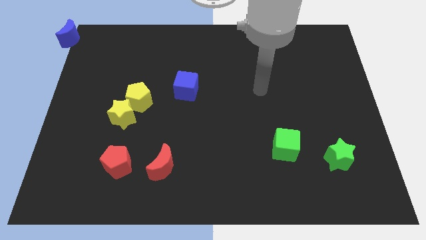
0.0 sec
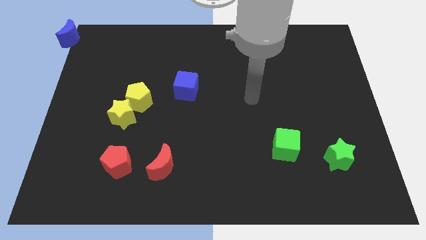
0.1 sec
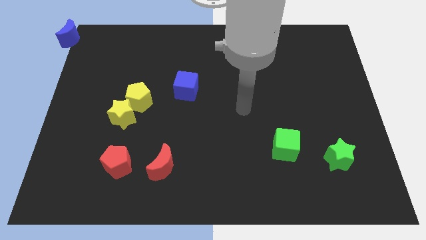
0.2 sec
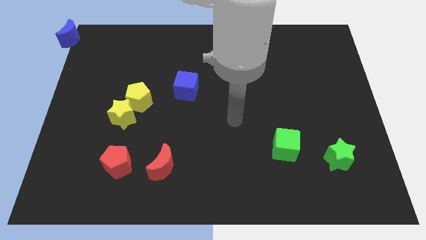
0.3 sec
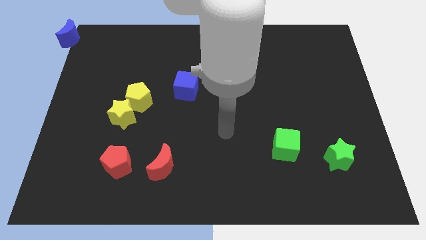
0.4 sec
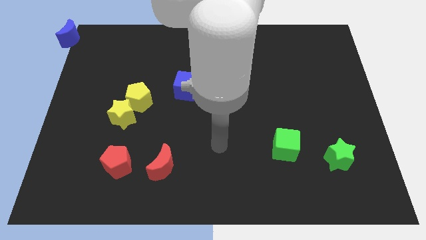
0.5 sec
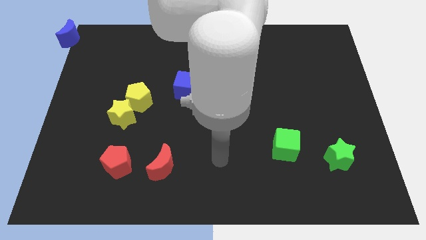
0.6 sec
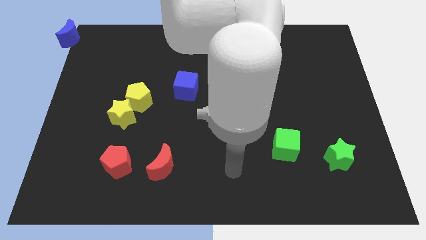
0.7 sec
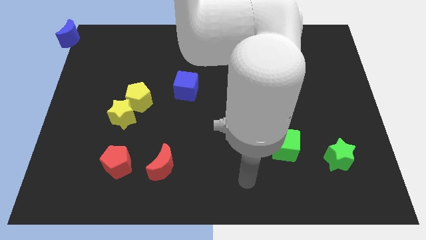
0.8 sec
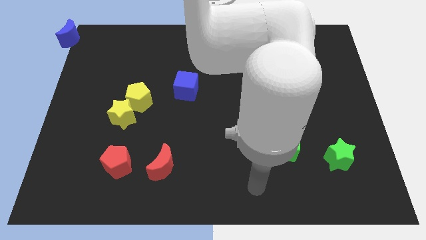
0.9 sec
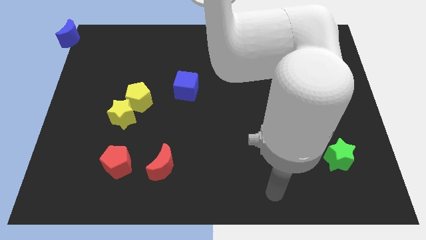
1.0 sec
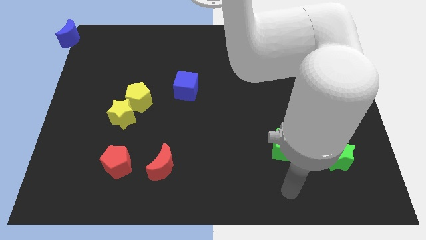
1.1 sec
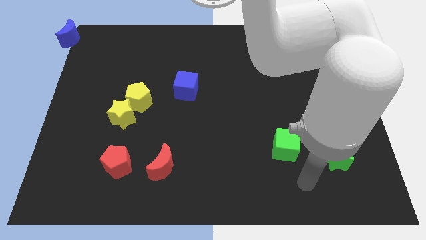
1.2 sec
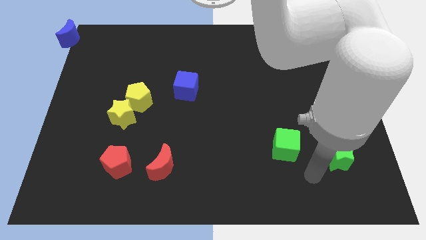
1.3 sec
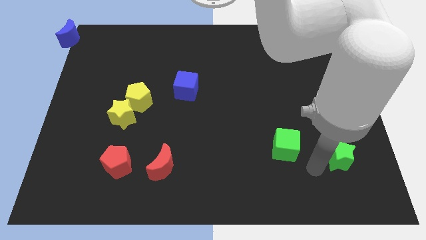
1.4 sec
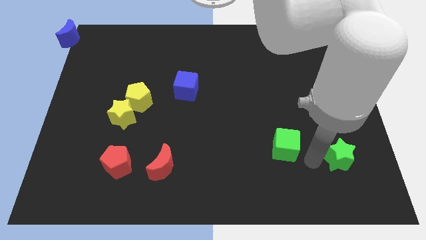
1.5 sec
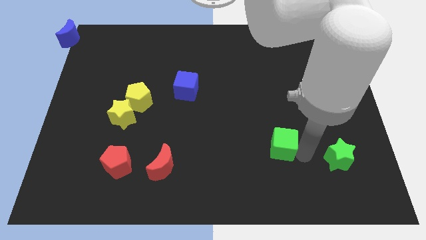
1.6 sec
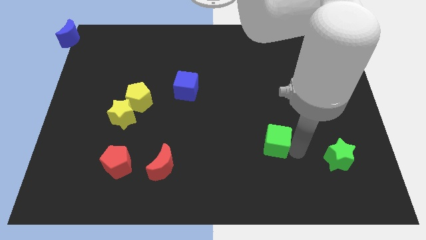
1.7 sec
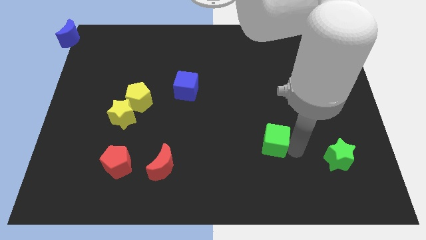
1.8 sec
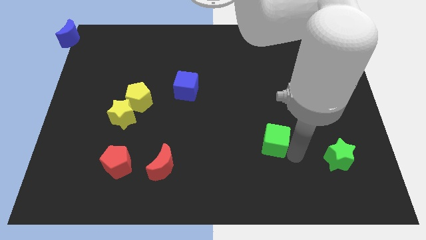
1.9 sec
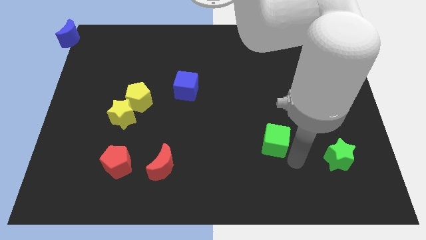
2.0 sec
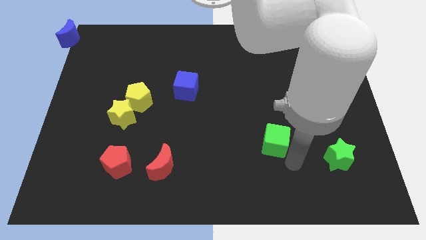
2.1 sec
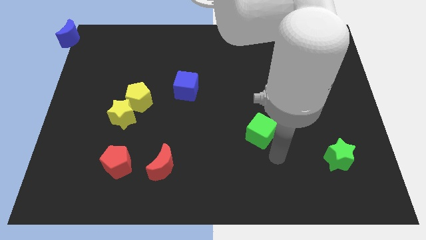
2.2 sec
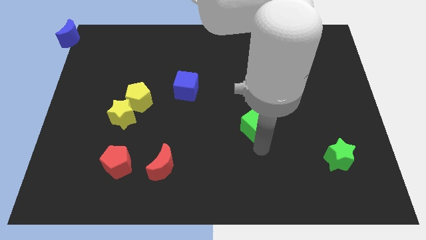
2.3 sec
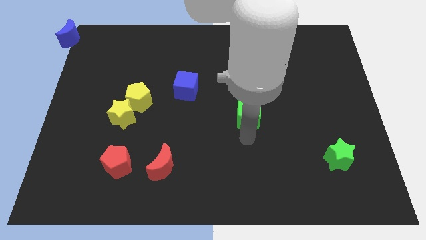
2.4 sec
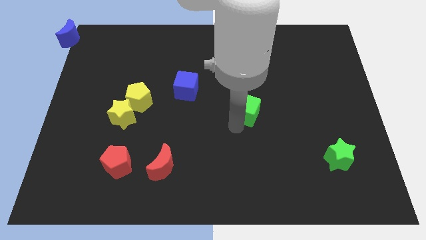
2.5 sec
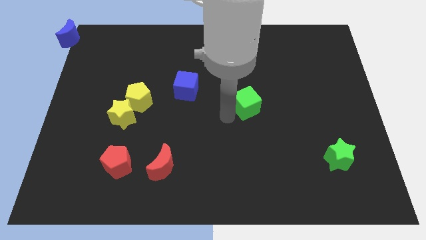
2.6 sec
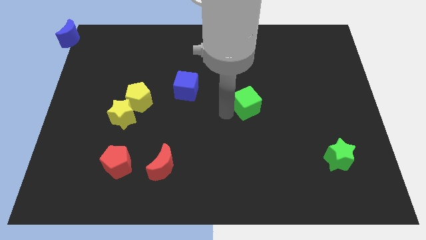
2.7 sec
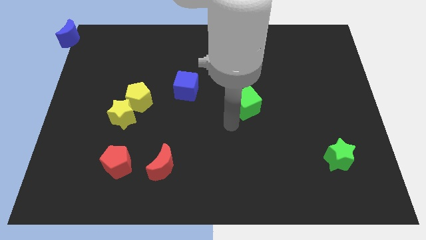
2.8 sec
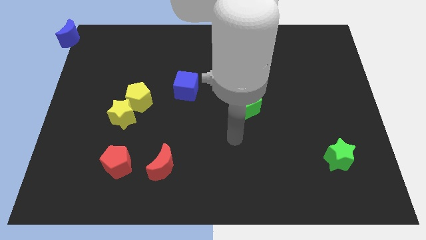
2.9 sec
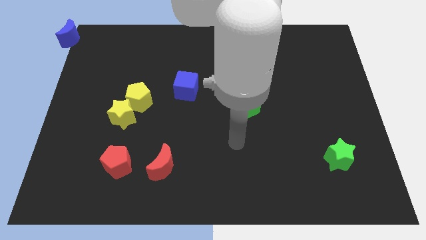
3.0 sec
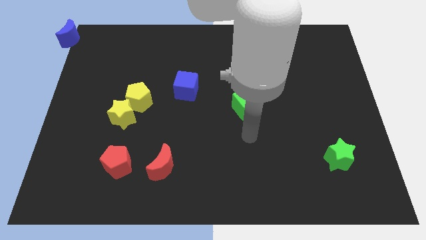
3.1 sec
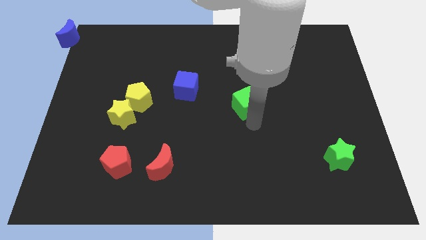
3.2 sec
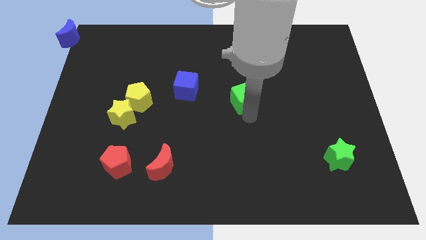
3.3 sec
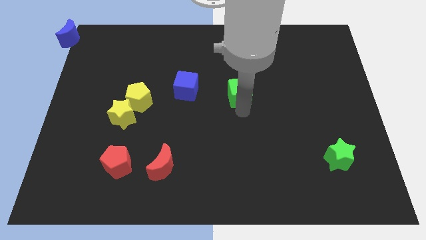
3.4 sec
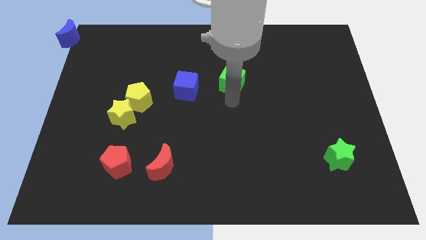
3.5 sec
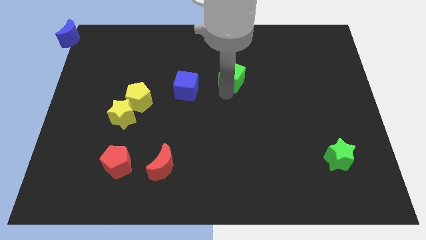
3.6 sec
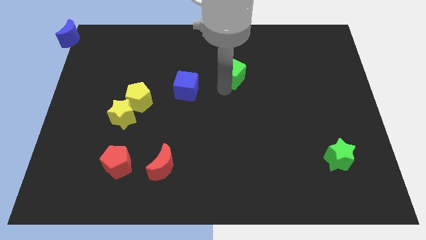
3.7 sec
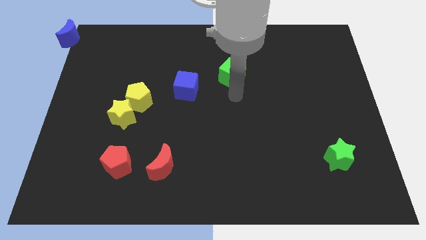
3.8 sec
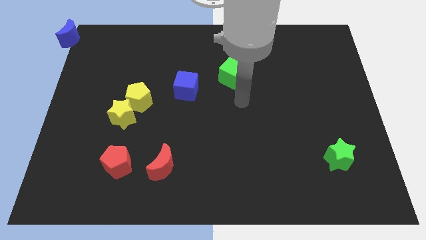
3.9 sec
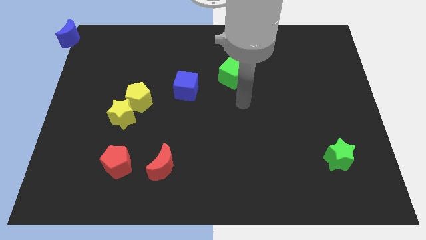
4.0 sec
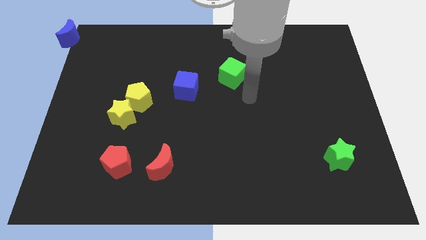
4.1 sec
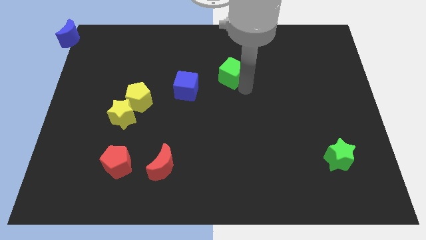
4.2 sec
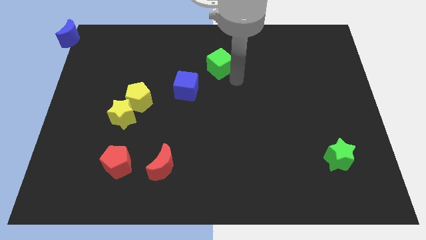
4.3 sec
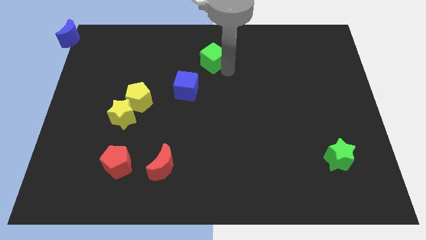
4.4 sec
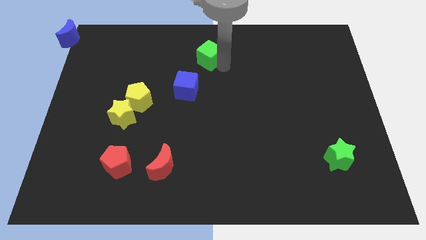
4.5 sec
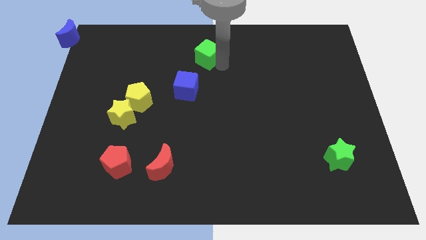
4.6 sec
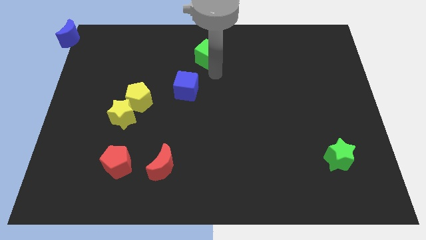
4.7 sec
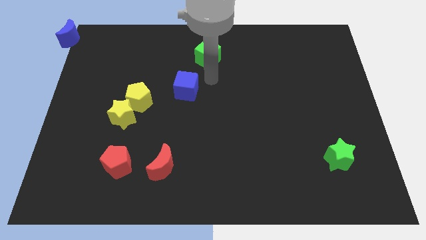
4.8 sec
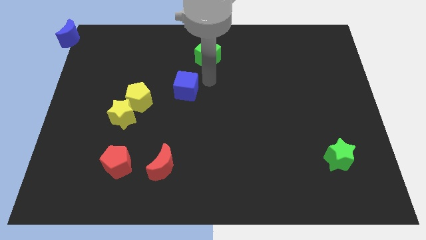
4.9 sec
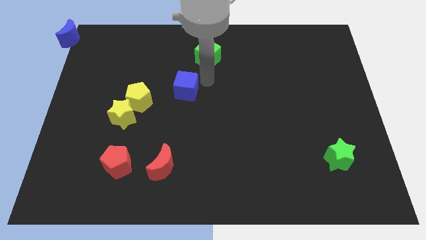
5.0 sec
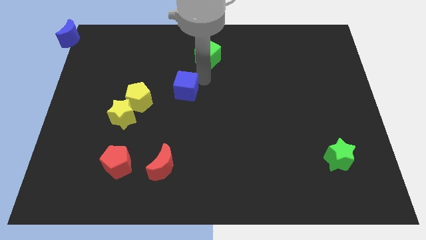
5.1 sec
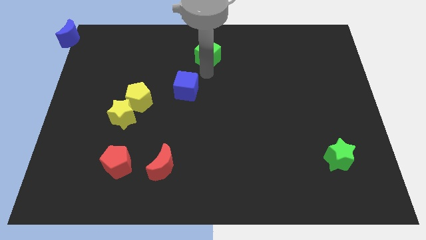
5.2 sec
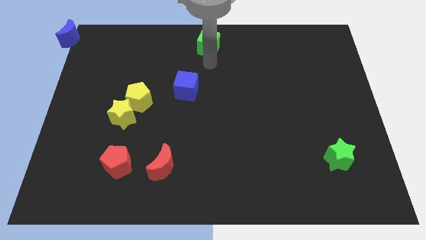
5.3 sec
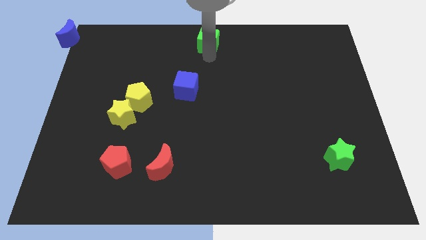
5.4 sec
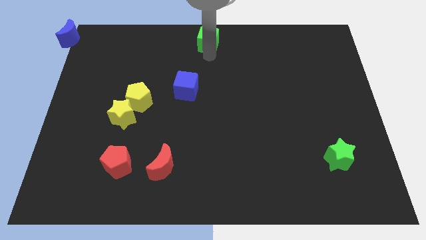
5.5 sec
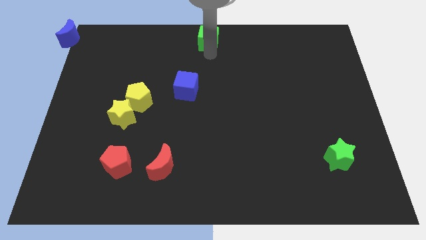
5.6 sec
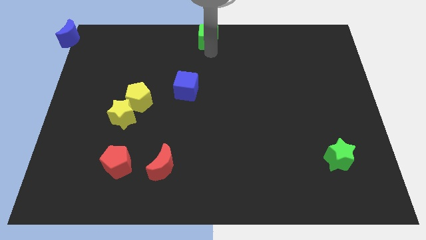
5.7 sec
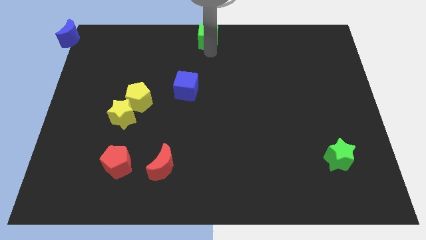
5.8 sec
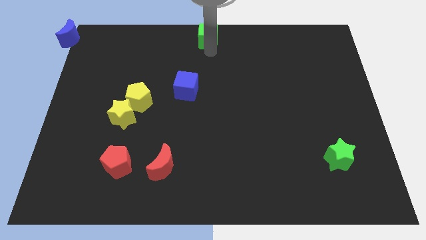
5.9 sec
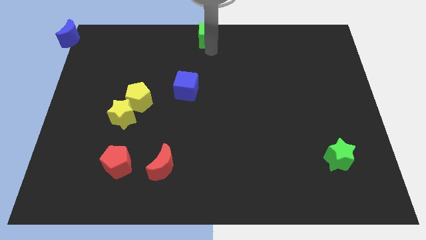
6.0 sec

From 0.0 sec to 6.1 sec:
push green cube to the top center of the board

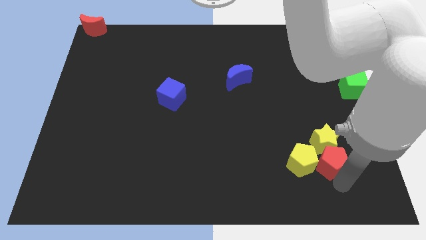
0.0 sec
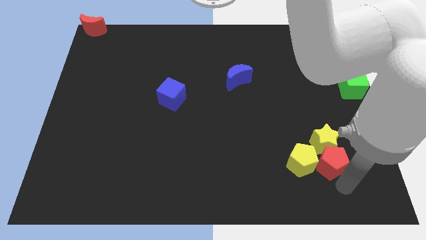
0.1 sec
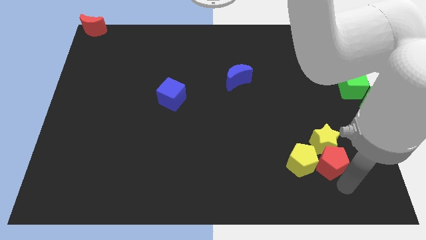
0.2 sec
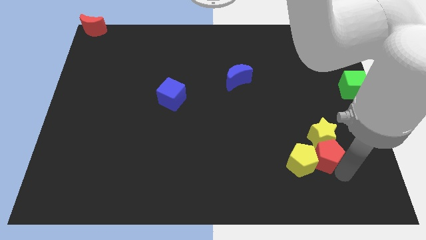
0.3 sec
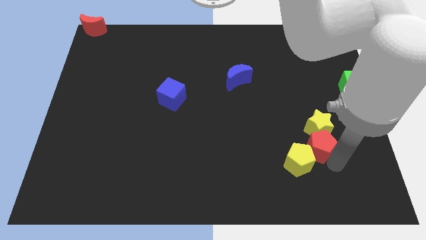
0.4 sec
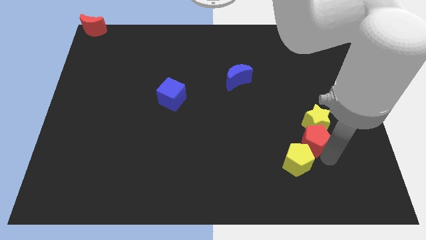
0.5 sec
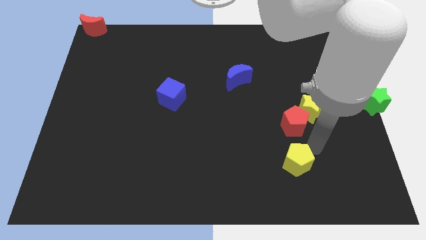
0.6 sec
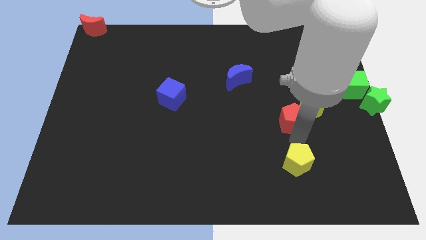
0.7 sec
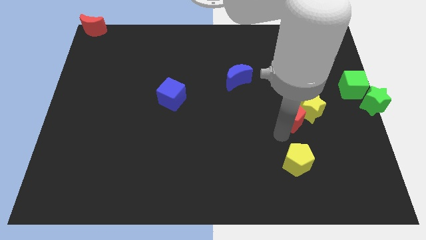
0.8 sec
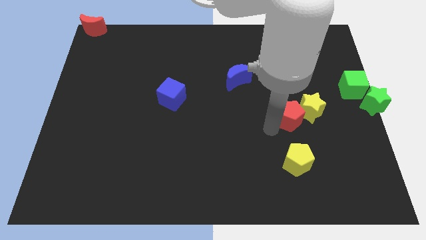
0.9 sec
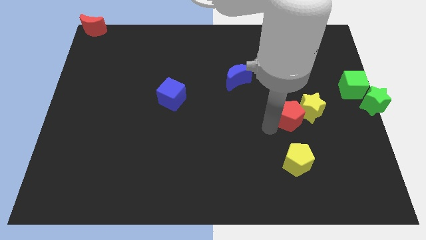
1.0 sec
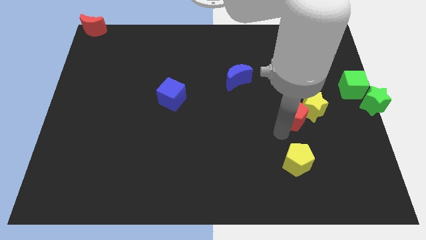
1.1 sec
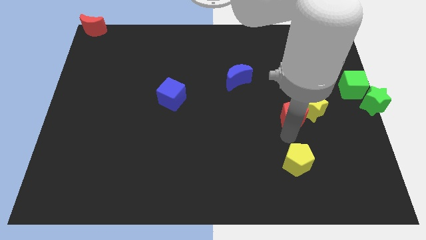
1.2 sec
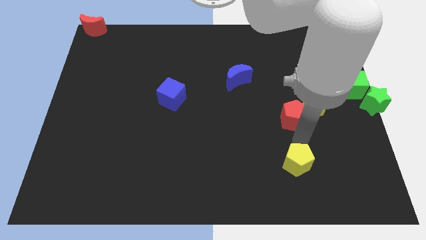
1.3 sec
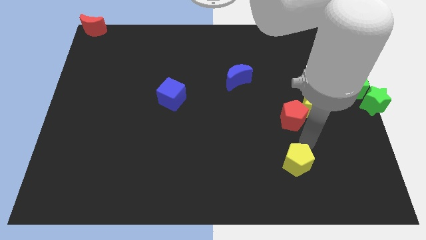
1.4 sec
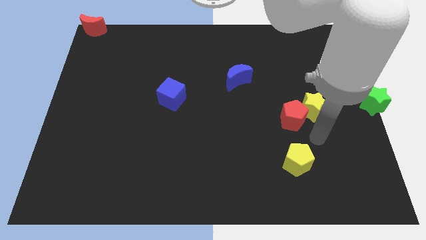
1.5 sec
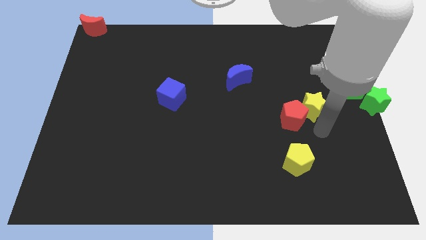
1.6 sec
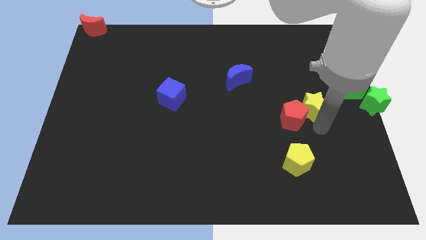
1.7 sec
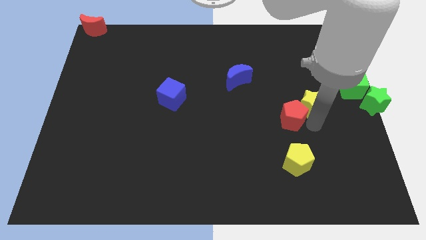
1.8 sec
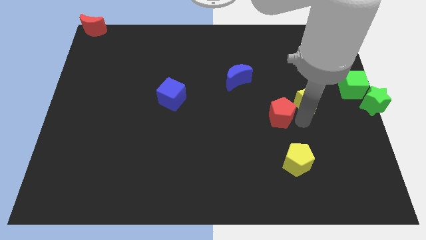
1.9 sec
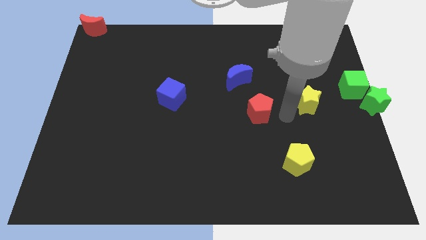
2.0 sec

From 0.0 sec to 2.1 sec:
move the red pentagon into the yellow star

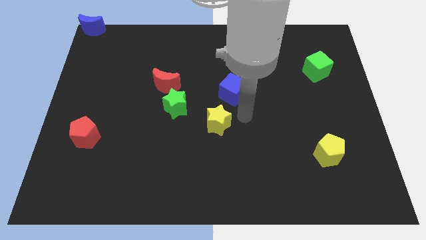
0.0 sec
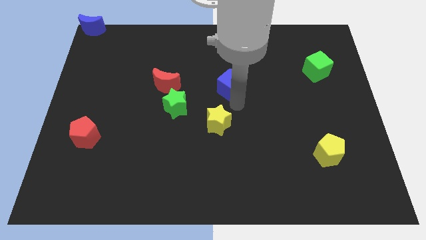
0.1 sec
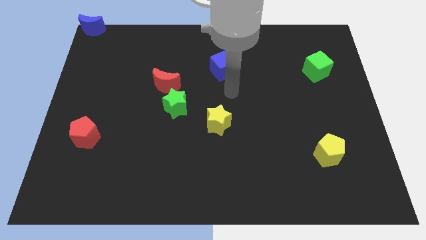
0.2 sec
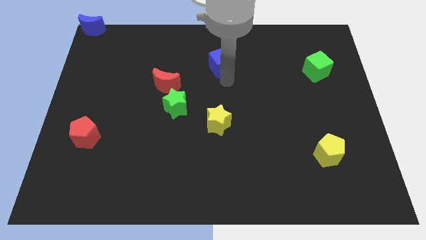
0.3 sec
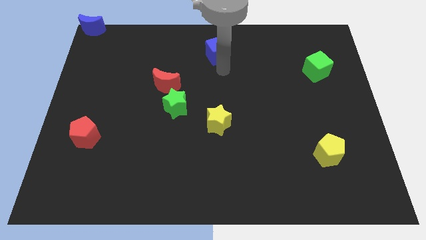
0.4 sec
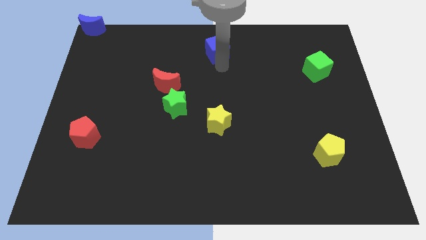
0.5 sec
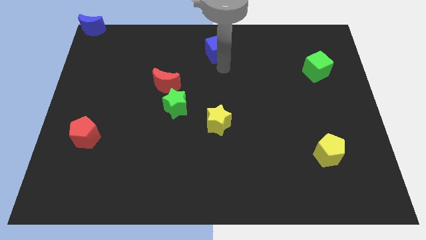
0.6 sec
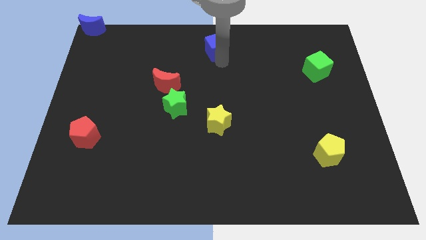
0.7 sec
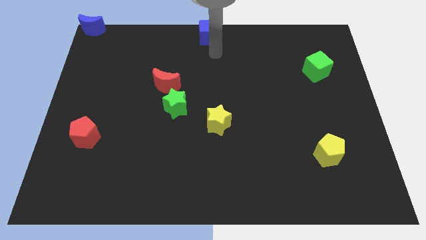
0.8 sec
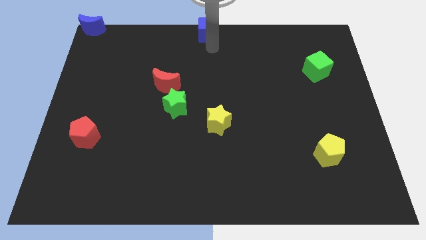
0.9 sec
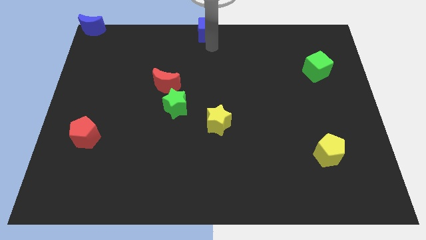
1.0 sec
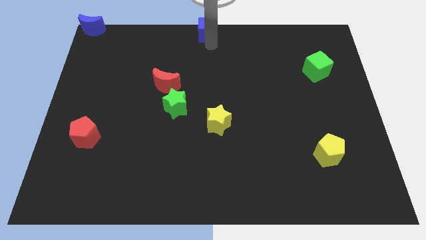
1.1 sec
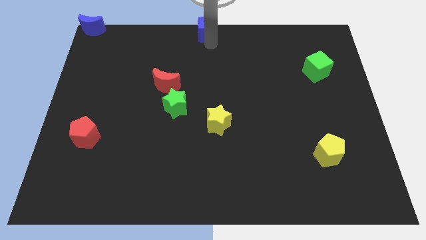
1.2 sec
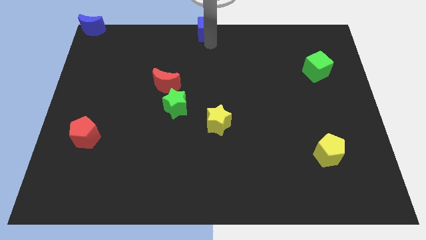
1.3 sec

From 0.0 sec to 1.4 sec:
move the blue cube to the top center of the board
